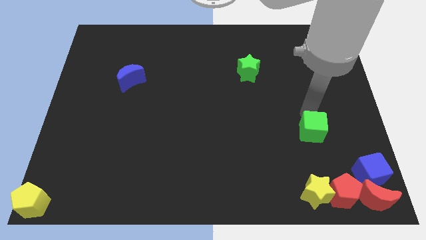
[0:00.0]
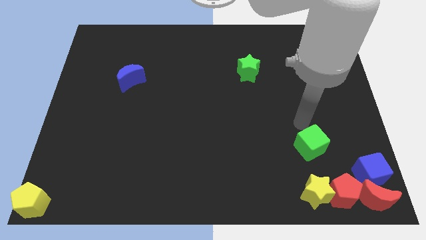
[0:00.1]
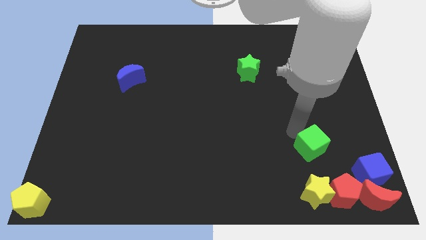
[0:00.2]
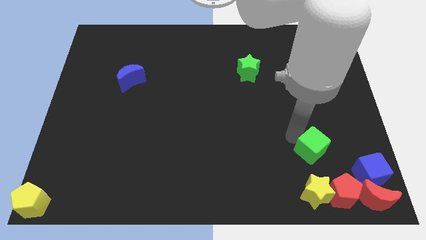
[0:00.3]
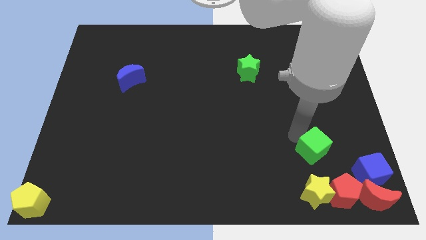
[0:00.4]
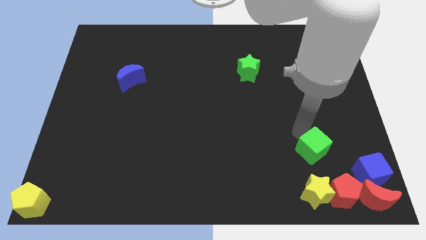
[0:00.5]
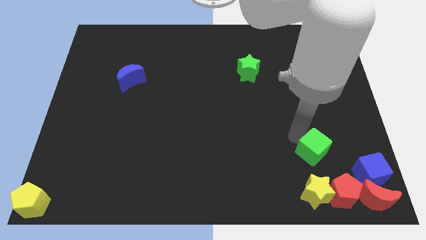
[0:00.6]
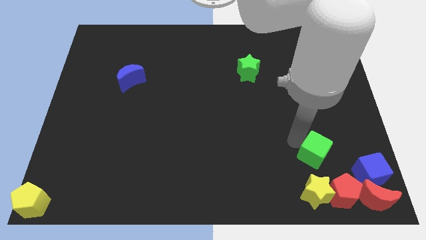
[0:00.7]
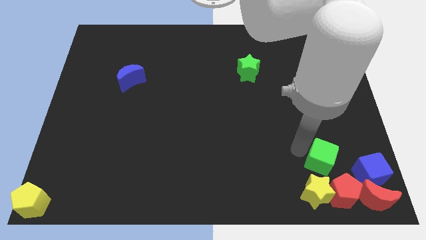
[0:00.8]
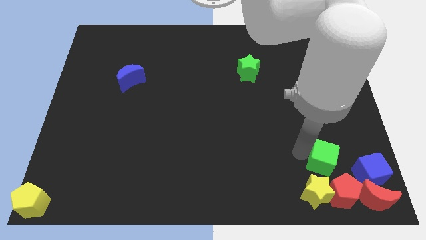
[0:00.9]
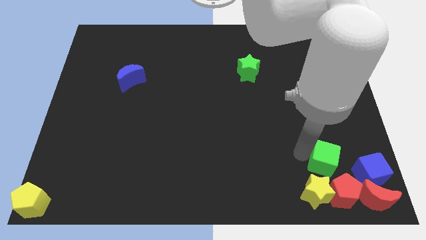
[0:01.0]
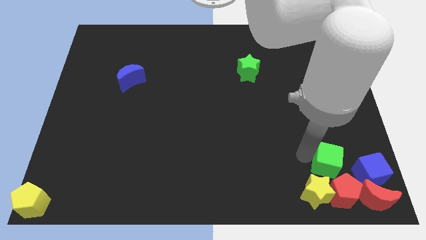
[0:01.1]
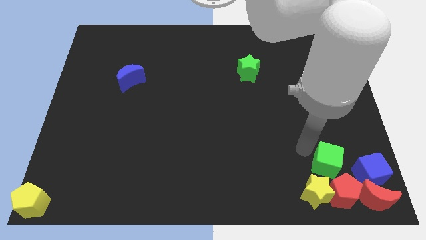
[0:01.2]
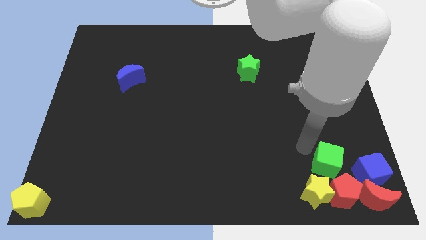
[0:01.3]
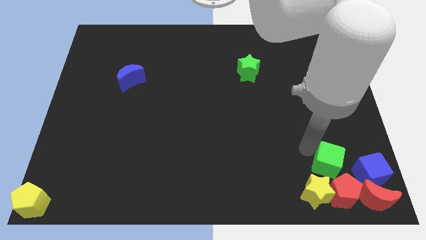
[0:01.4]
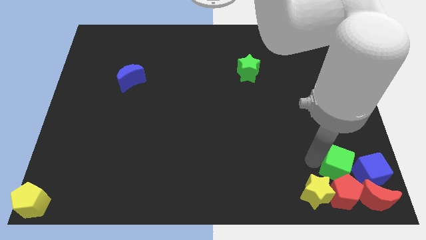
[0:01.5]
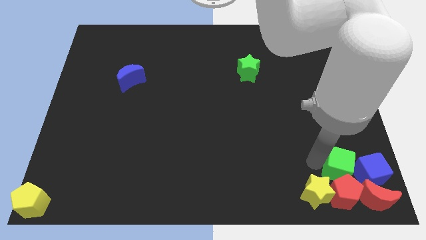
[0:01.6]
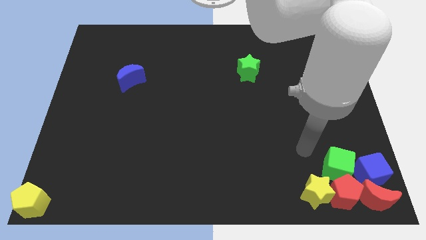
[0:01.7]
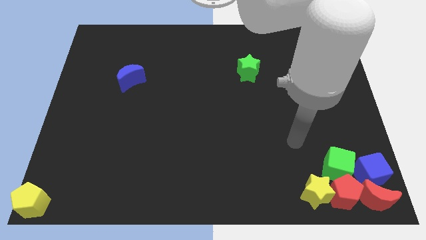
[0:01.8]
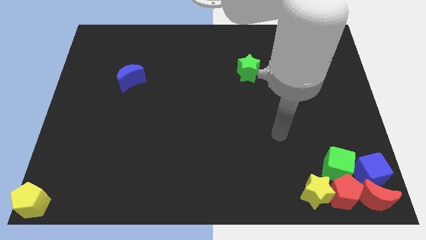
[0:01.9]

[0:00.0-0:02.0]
push the green cube left to the blue cube

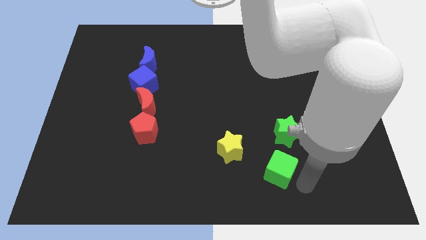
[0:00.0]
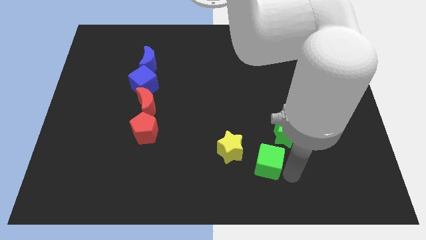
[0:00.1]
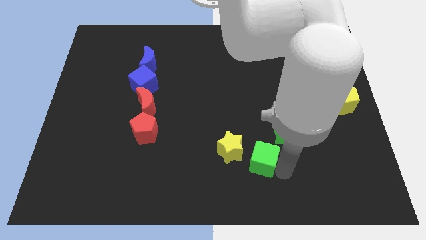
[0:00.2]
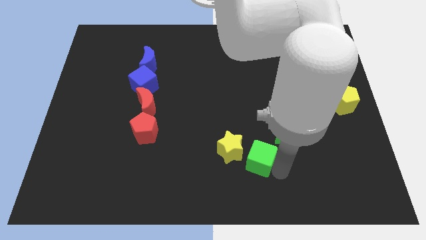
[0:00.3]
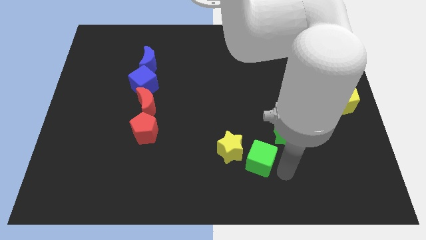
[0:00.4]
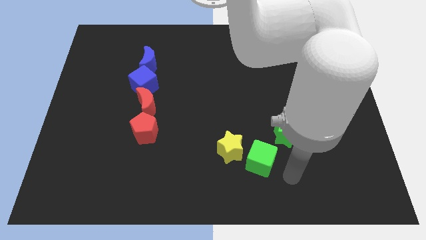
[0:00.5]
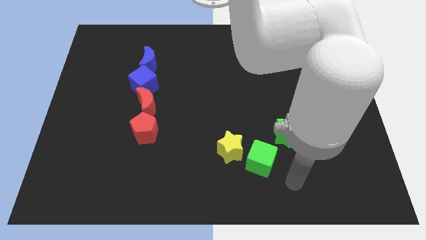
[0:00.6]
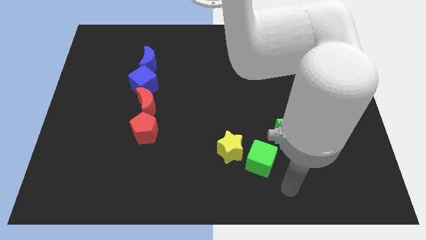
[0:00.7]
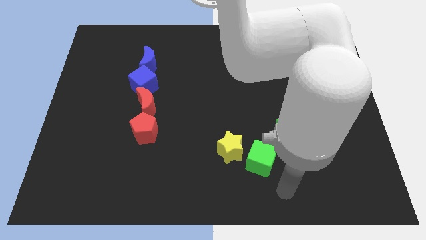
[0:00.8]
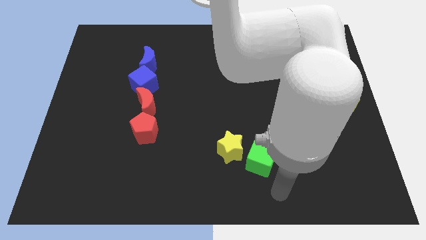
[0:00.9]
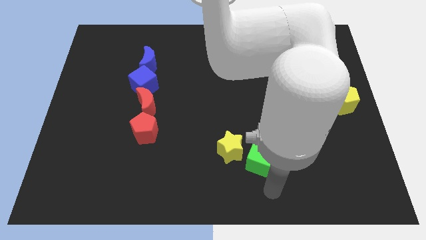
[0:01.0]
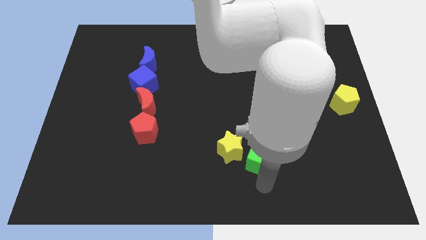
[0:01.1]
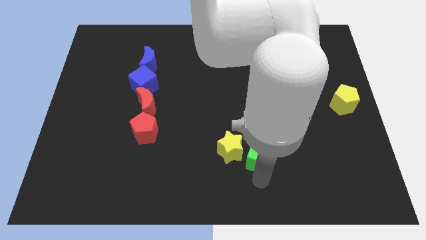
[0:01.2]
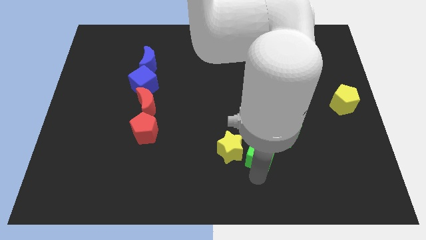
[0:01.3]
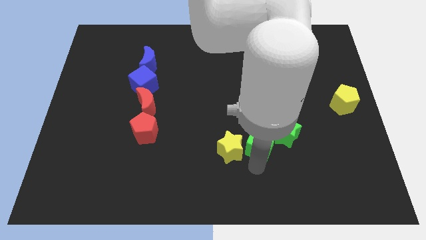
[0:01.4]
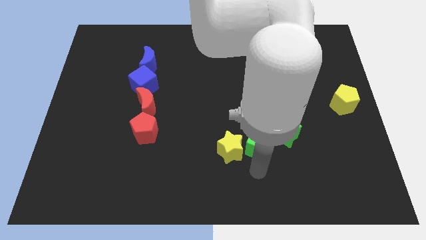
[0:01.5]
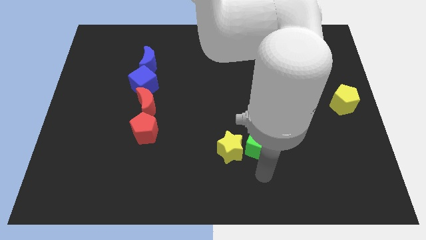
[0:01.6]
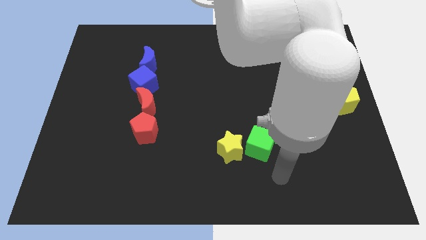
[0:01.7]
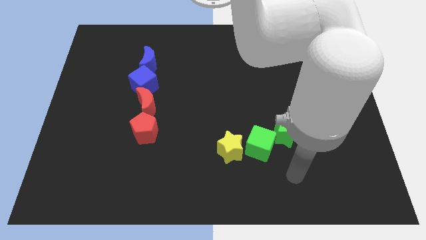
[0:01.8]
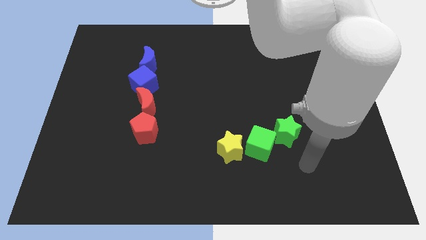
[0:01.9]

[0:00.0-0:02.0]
push the green cube in between the yellow star and green star

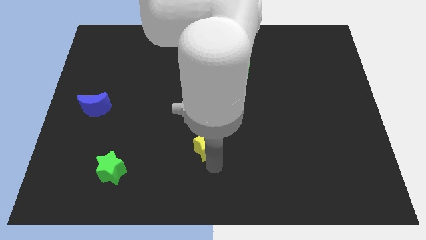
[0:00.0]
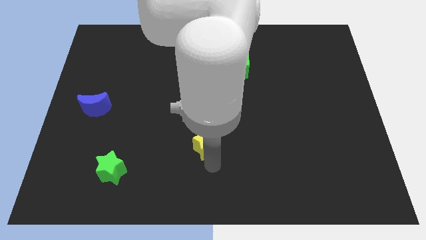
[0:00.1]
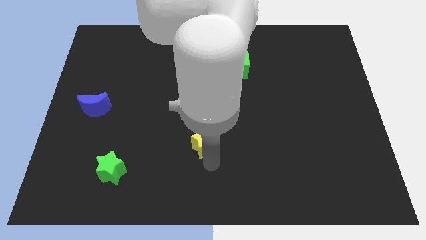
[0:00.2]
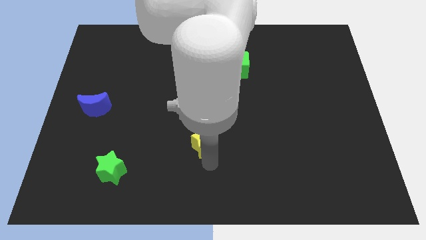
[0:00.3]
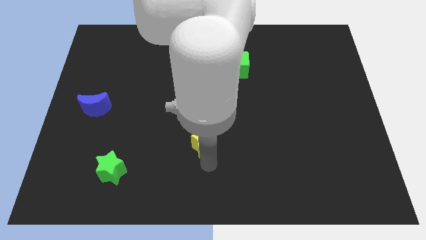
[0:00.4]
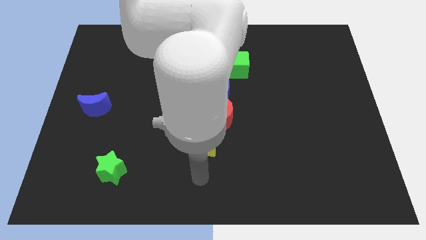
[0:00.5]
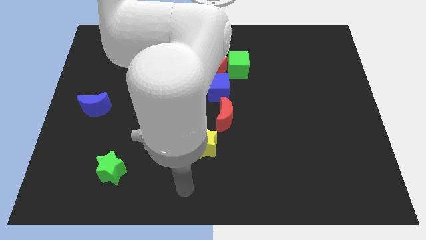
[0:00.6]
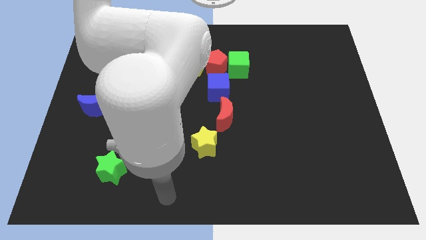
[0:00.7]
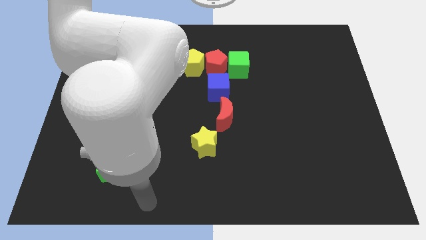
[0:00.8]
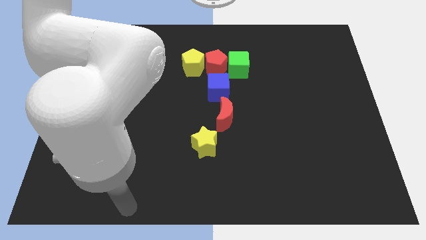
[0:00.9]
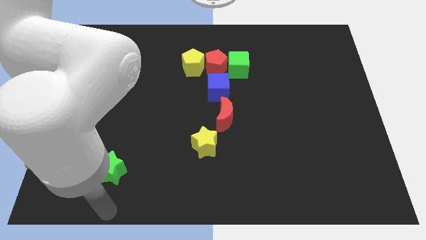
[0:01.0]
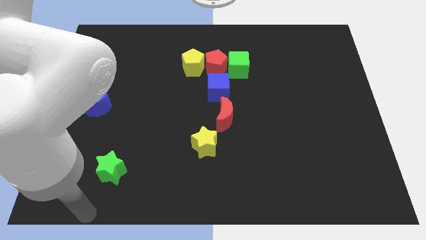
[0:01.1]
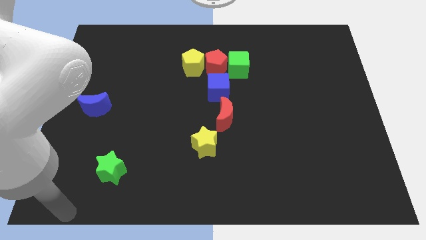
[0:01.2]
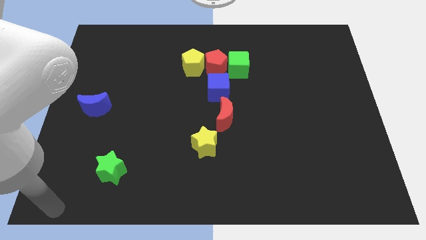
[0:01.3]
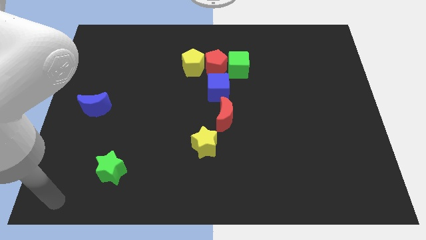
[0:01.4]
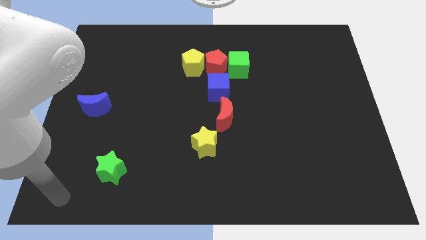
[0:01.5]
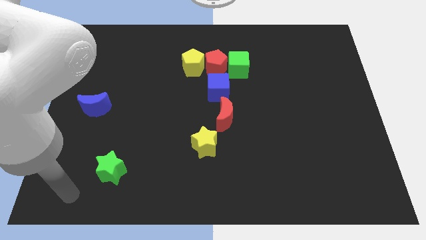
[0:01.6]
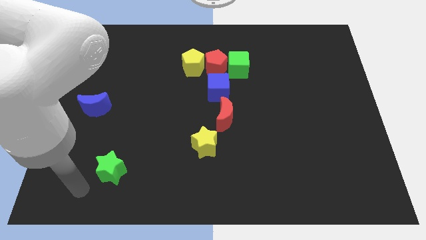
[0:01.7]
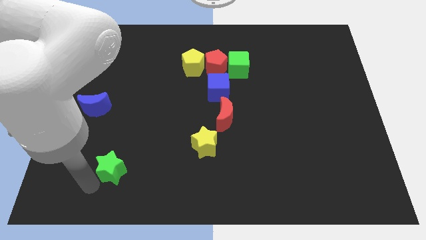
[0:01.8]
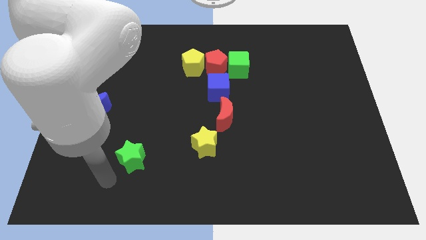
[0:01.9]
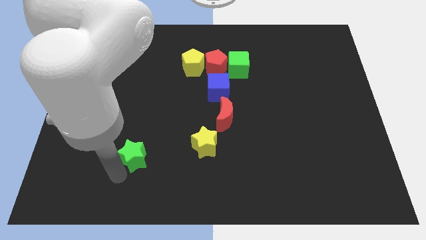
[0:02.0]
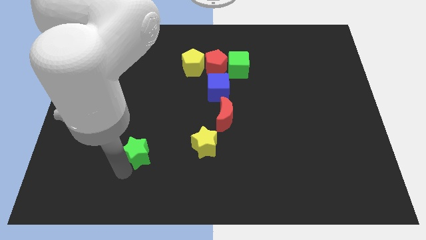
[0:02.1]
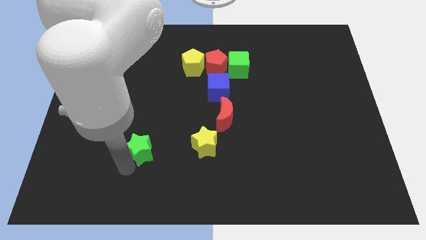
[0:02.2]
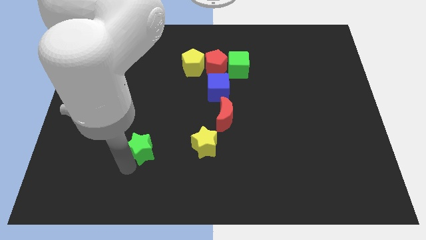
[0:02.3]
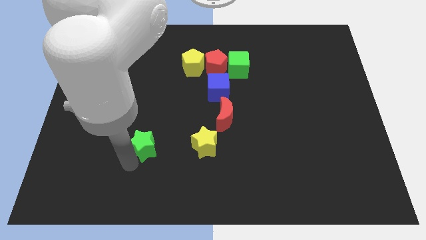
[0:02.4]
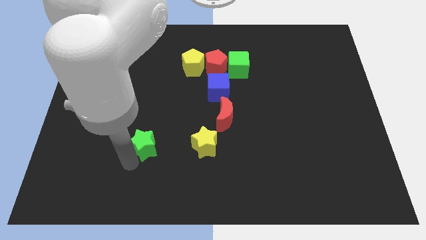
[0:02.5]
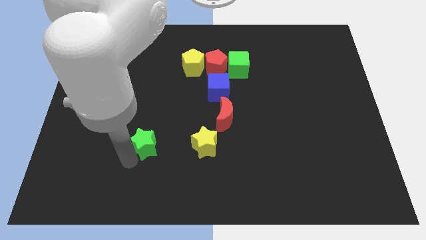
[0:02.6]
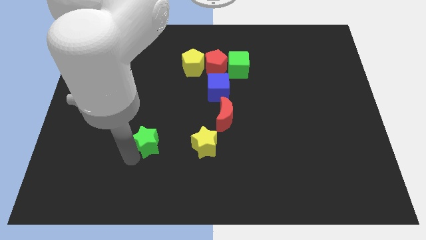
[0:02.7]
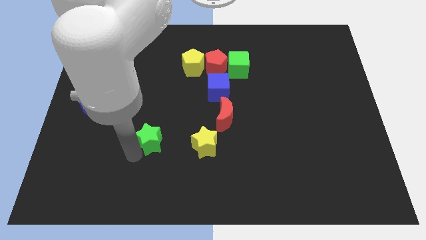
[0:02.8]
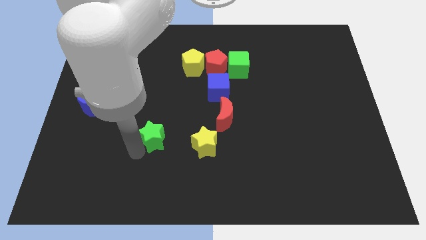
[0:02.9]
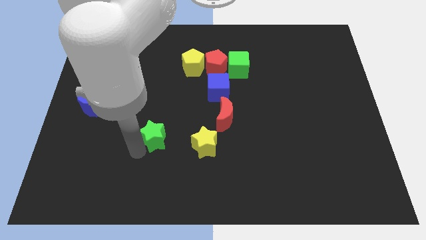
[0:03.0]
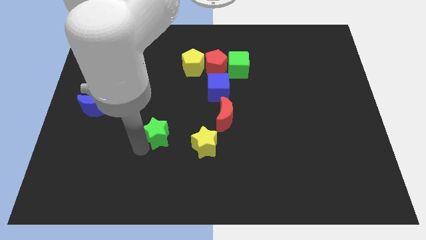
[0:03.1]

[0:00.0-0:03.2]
move the green star parallel left to the yellow star

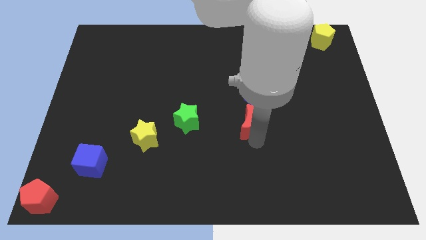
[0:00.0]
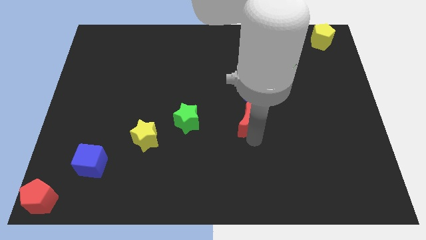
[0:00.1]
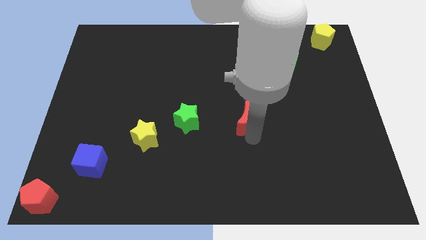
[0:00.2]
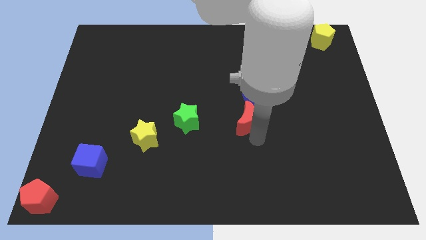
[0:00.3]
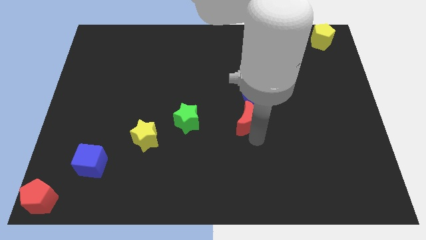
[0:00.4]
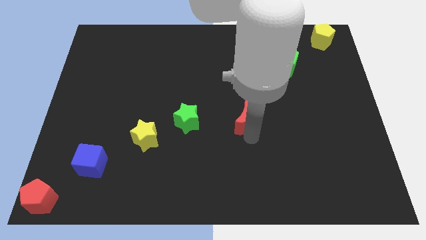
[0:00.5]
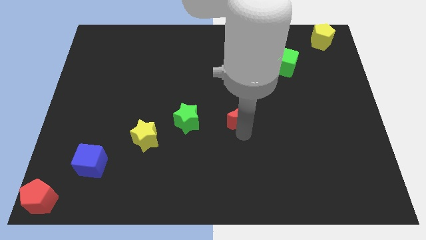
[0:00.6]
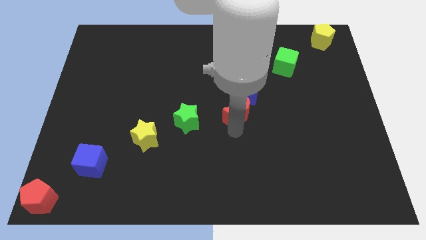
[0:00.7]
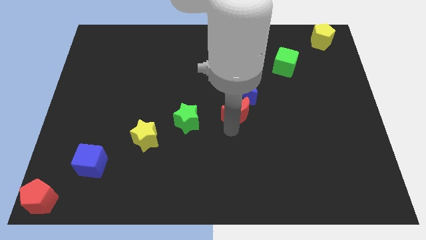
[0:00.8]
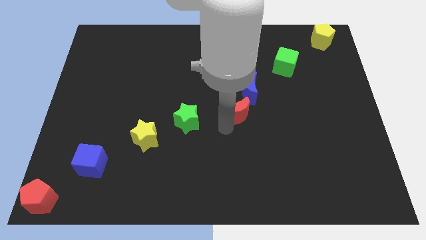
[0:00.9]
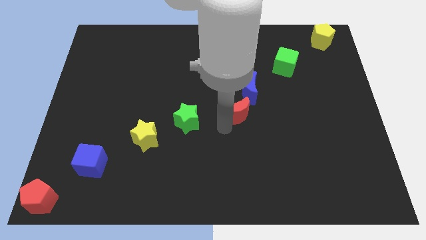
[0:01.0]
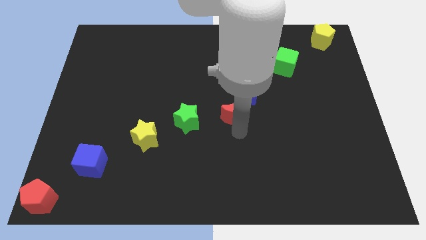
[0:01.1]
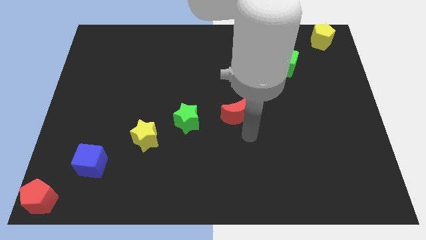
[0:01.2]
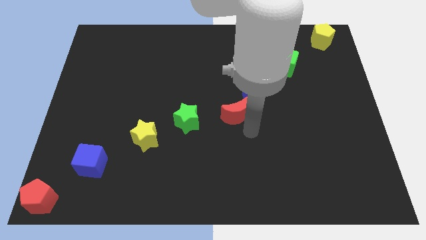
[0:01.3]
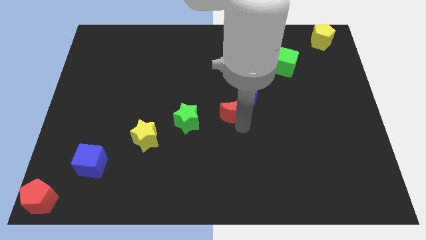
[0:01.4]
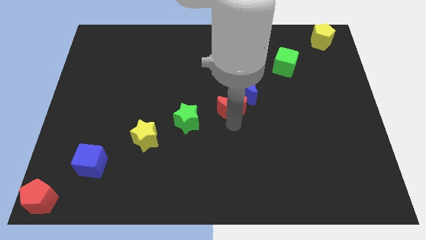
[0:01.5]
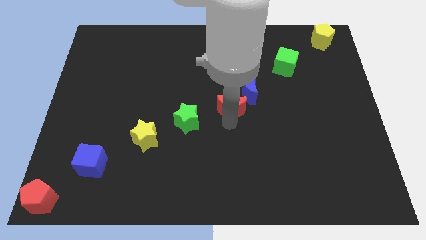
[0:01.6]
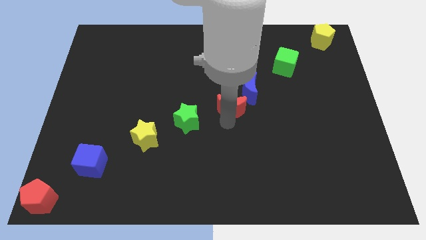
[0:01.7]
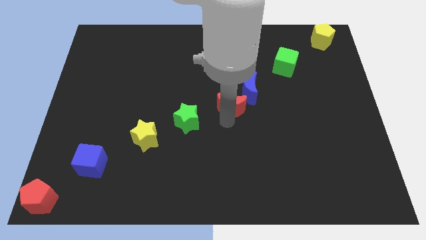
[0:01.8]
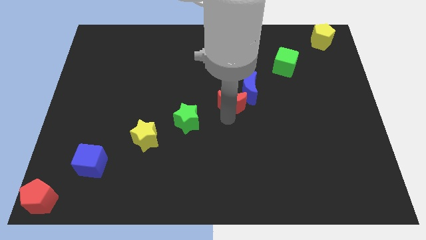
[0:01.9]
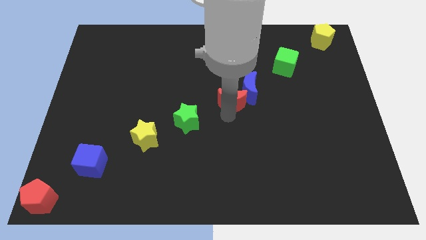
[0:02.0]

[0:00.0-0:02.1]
push the red moon into the left side of the blue crescent
